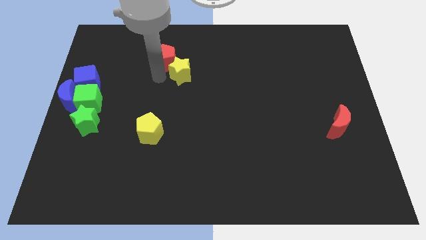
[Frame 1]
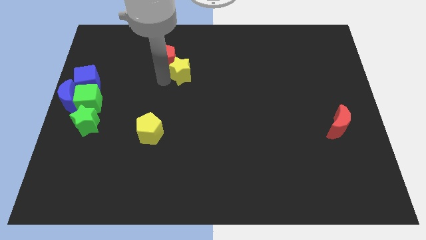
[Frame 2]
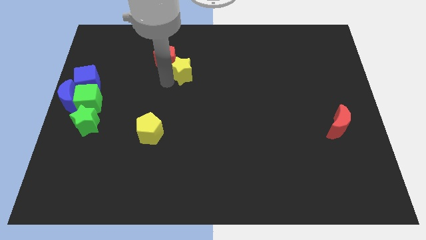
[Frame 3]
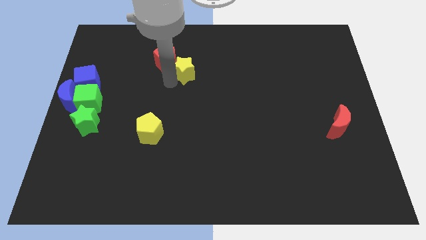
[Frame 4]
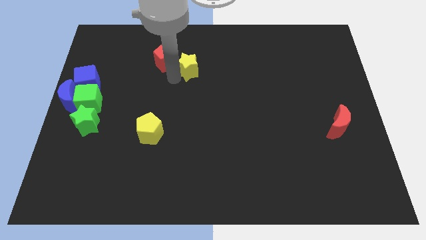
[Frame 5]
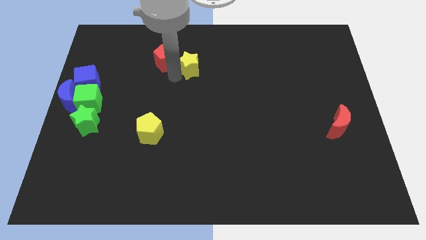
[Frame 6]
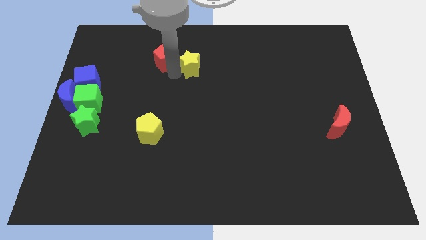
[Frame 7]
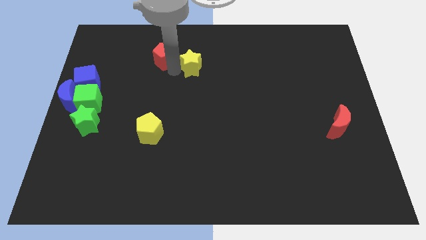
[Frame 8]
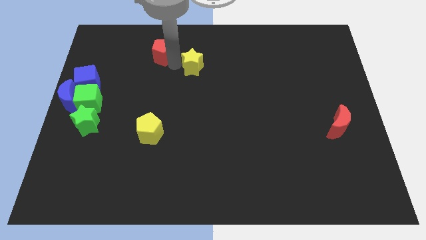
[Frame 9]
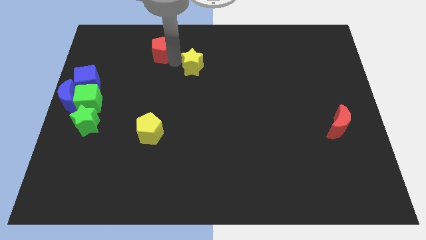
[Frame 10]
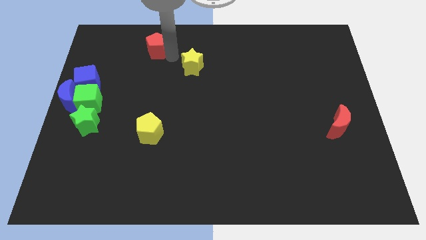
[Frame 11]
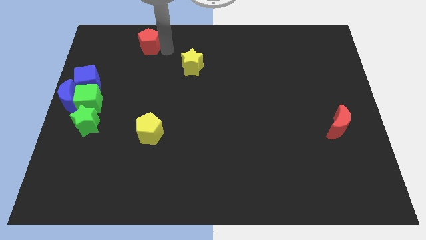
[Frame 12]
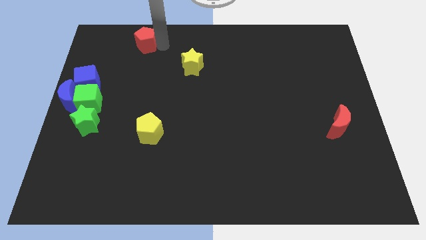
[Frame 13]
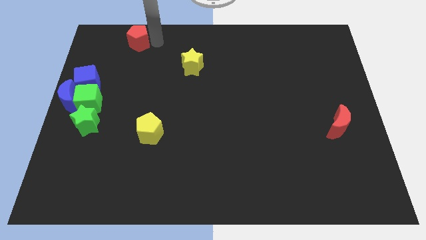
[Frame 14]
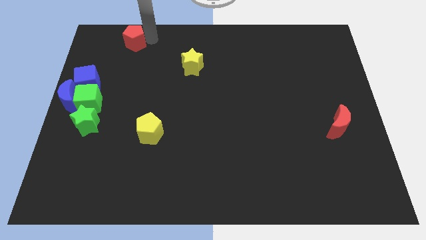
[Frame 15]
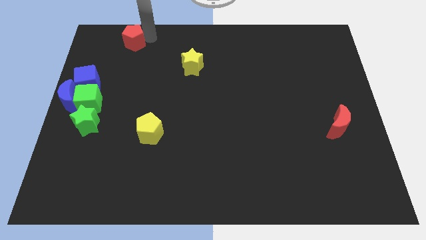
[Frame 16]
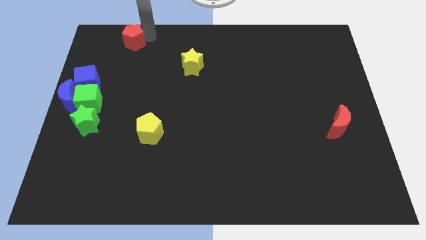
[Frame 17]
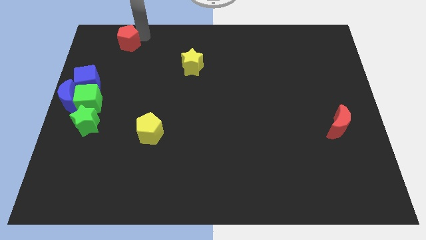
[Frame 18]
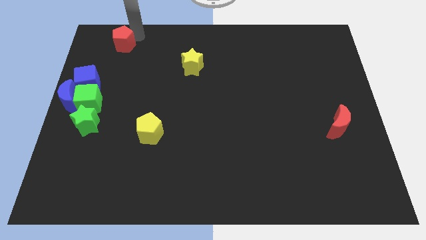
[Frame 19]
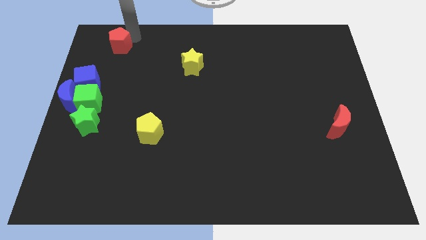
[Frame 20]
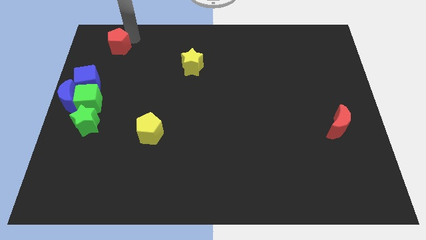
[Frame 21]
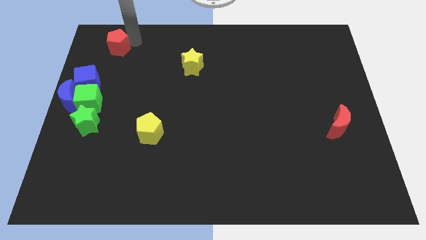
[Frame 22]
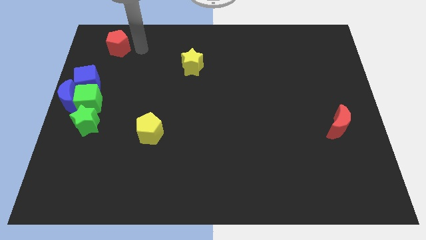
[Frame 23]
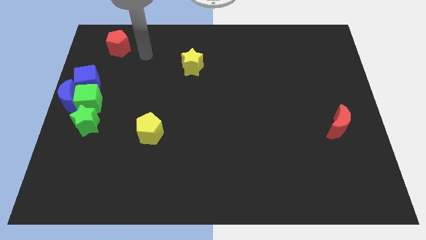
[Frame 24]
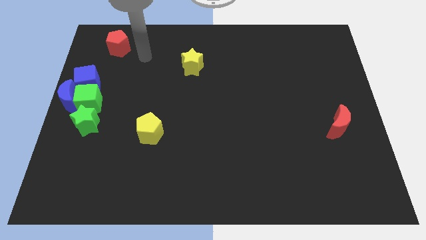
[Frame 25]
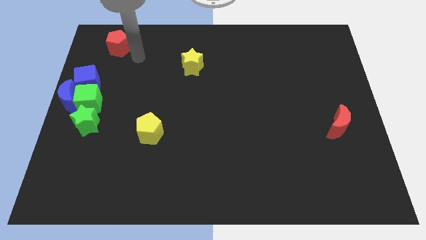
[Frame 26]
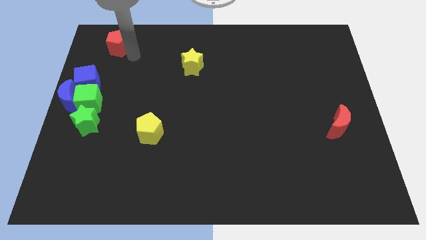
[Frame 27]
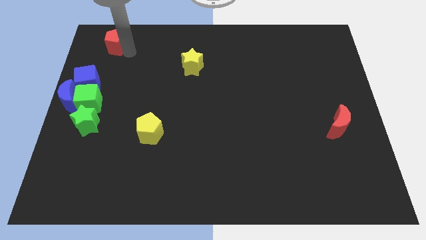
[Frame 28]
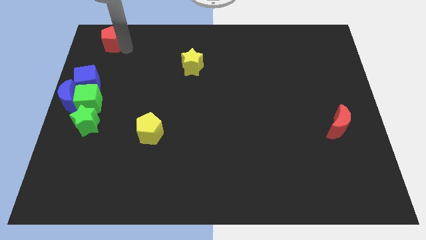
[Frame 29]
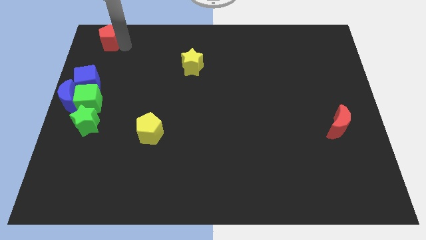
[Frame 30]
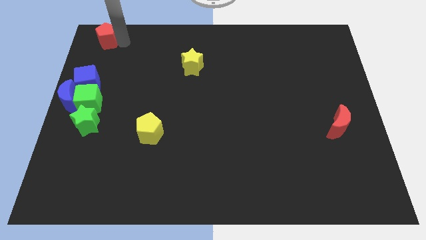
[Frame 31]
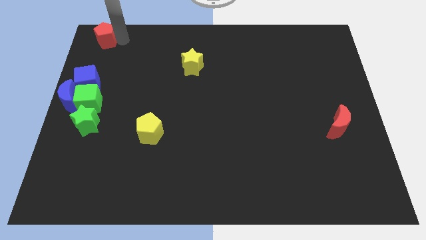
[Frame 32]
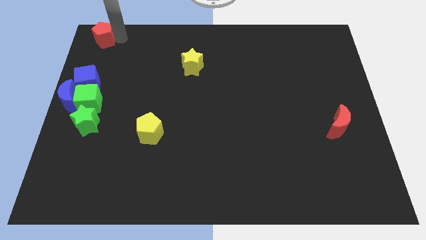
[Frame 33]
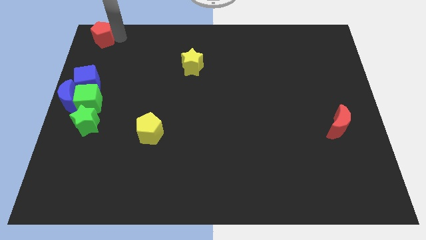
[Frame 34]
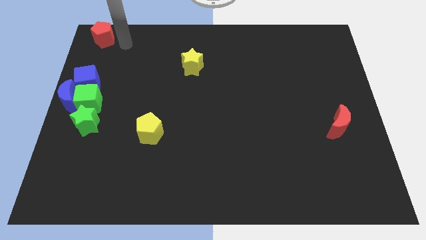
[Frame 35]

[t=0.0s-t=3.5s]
separate red pentagon from yellow star

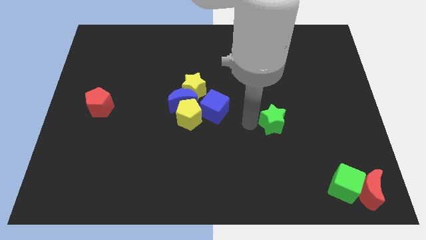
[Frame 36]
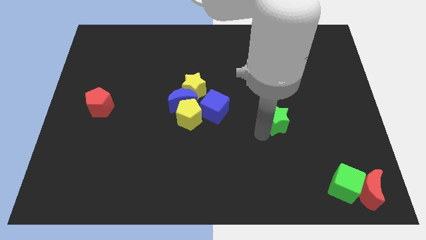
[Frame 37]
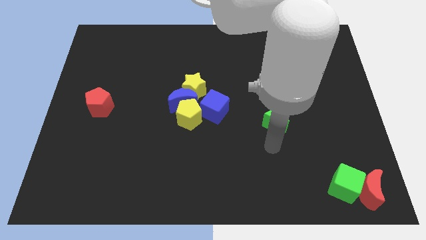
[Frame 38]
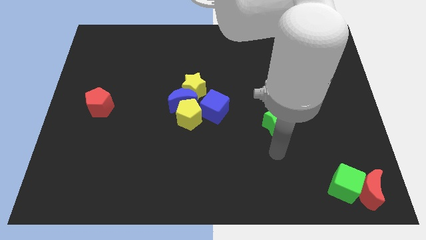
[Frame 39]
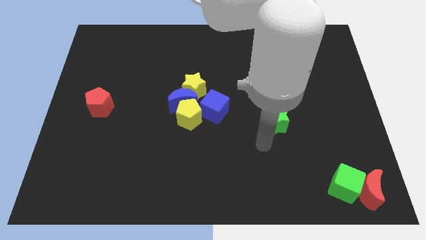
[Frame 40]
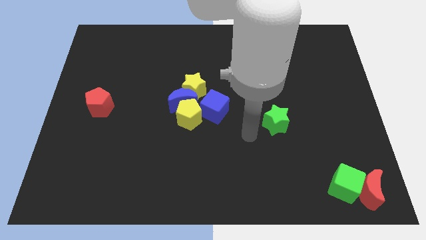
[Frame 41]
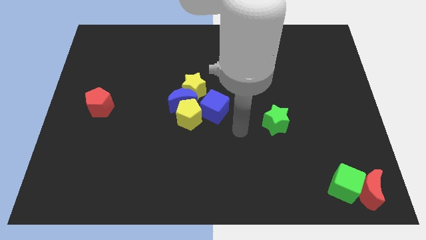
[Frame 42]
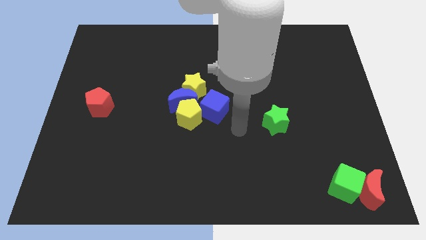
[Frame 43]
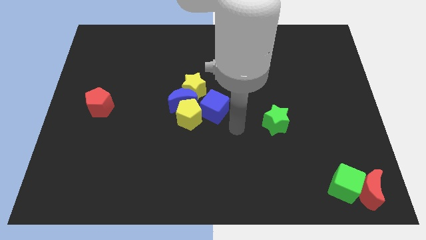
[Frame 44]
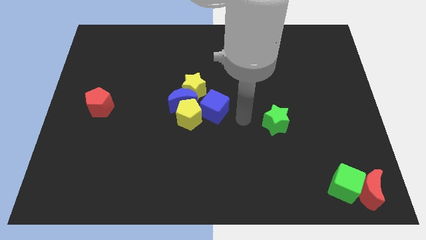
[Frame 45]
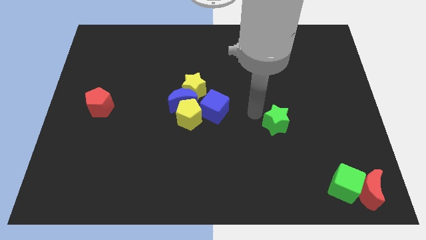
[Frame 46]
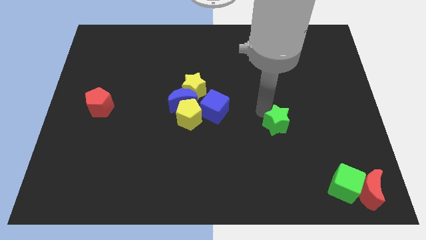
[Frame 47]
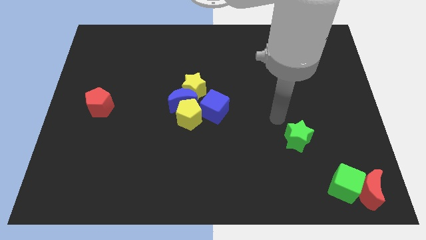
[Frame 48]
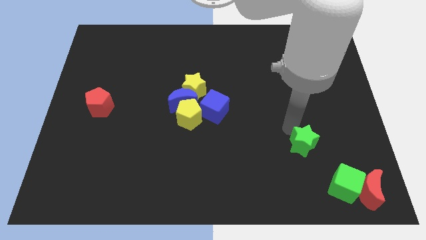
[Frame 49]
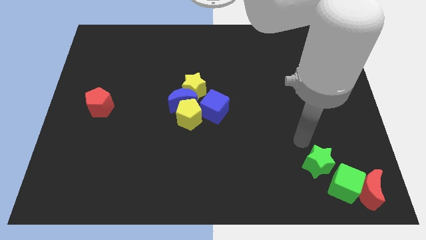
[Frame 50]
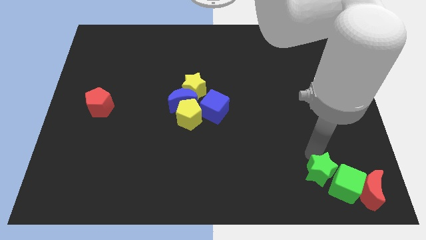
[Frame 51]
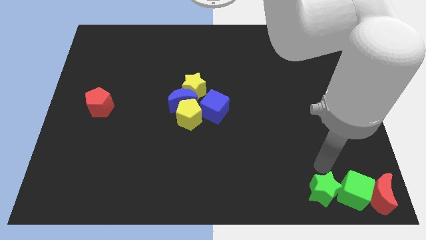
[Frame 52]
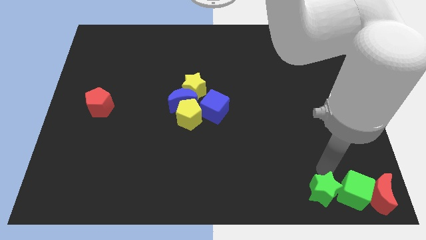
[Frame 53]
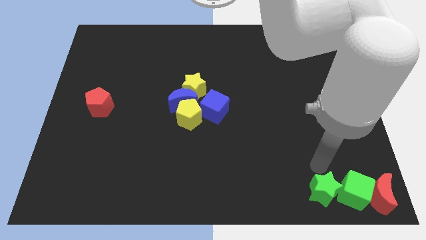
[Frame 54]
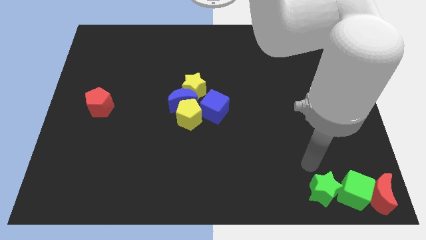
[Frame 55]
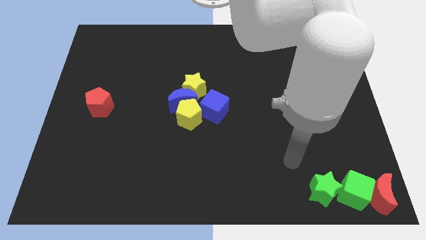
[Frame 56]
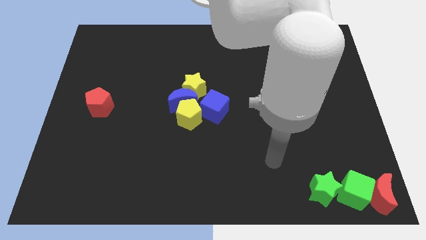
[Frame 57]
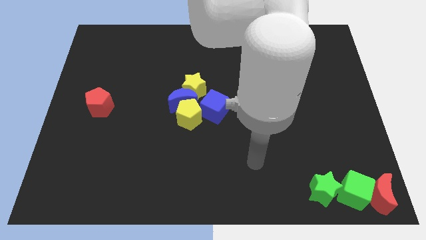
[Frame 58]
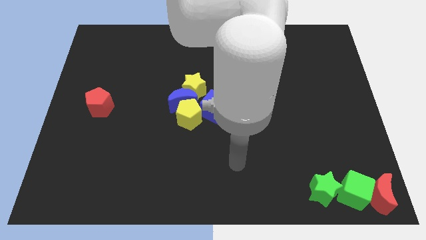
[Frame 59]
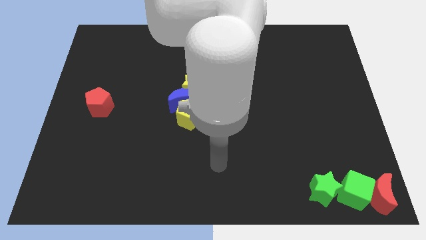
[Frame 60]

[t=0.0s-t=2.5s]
move the green star to the left of the green cube

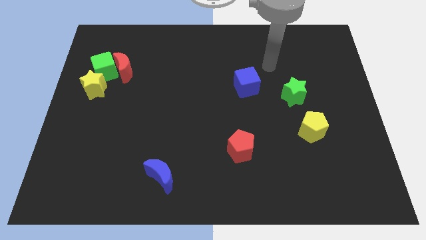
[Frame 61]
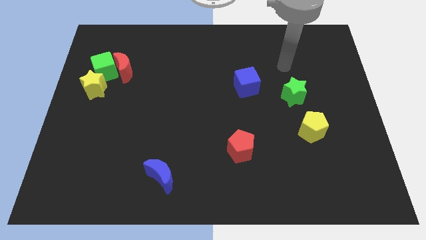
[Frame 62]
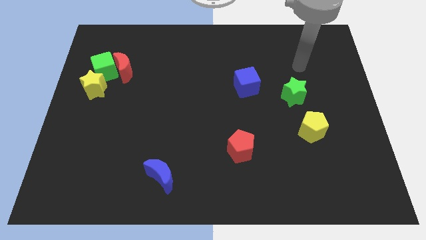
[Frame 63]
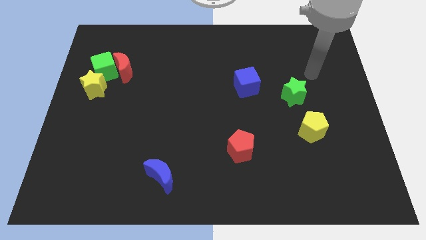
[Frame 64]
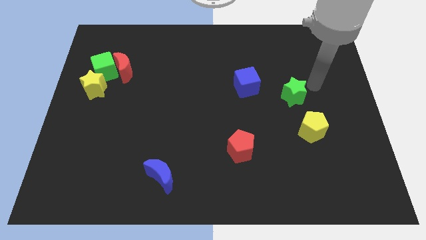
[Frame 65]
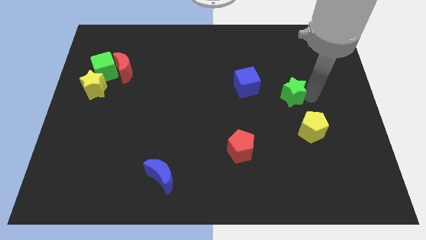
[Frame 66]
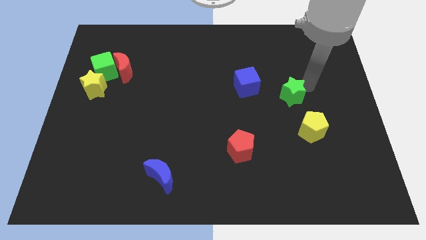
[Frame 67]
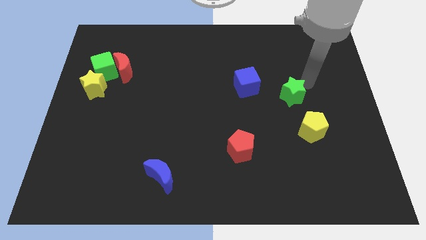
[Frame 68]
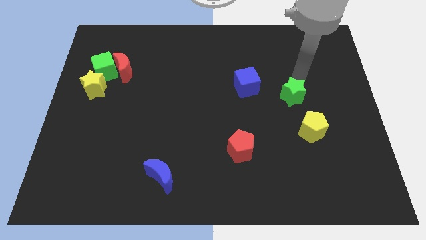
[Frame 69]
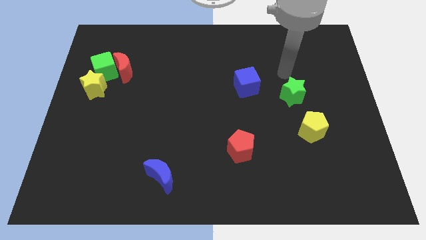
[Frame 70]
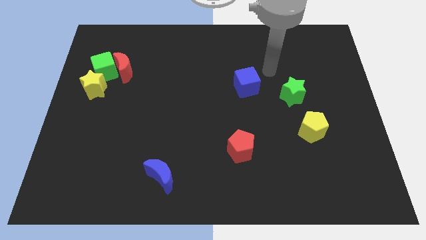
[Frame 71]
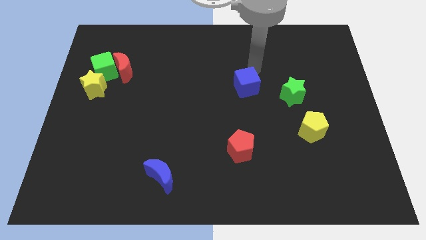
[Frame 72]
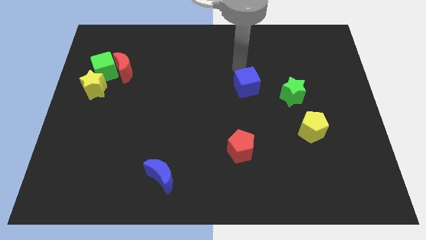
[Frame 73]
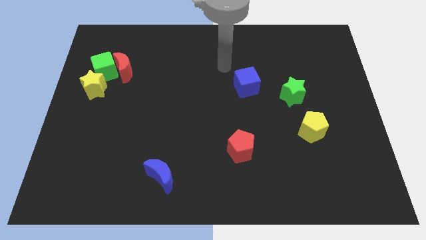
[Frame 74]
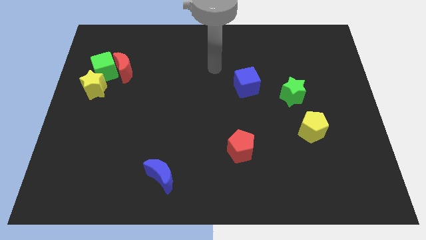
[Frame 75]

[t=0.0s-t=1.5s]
touch the green star

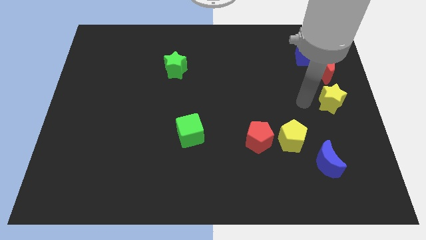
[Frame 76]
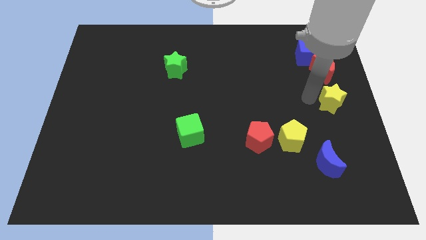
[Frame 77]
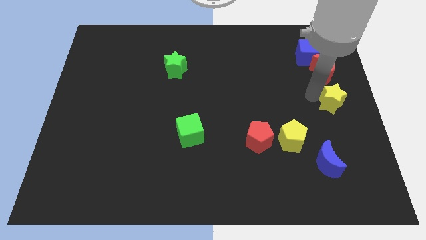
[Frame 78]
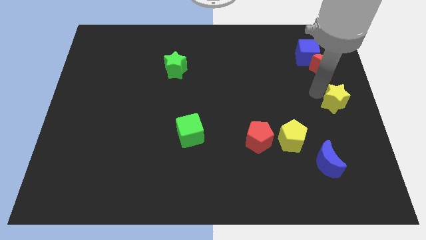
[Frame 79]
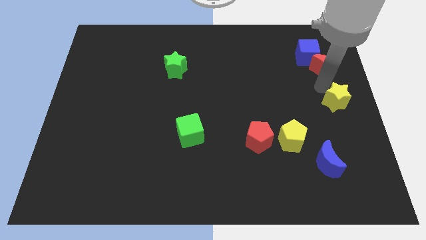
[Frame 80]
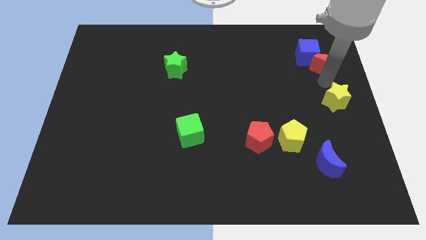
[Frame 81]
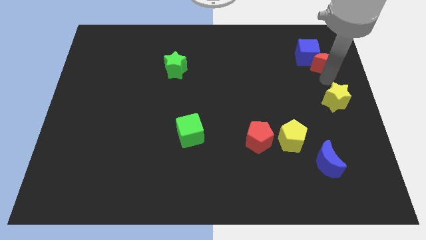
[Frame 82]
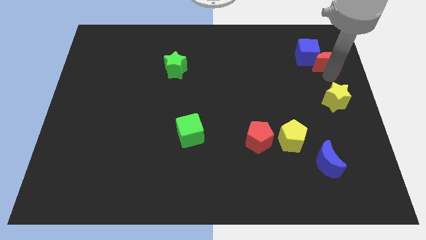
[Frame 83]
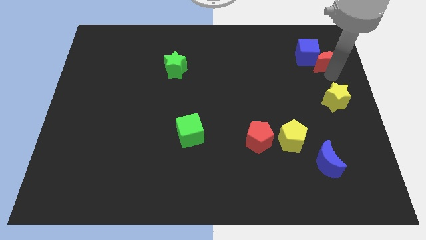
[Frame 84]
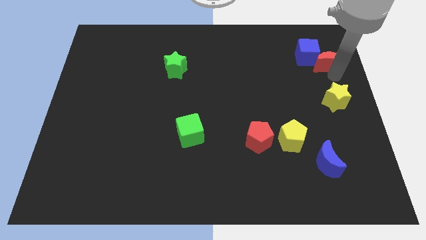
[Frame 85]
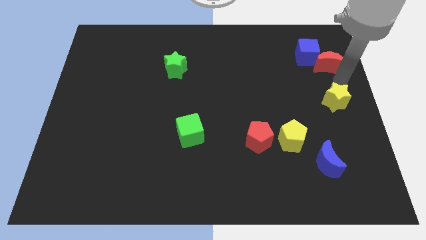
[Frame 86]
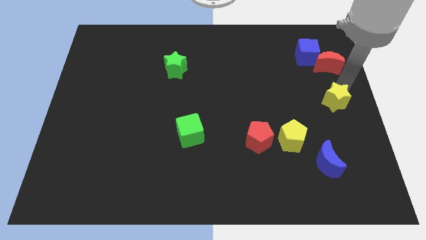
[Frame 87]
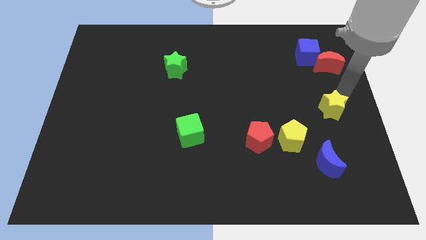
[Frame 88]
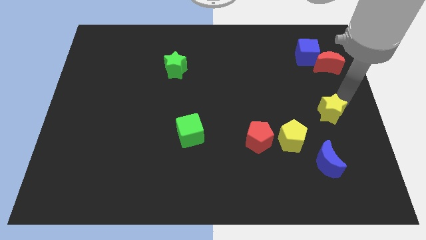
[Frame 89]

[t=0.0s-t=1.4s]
separate the yellow star and the red crescent
